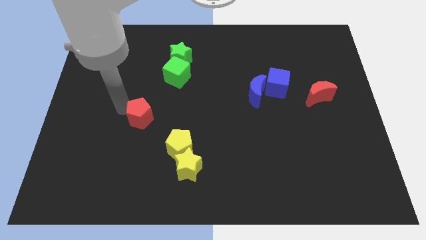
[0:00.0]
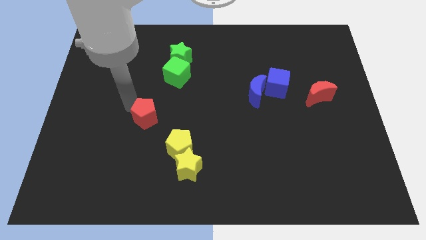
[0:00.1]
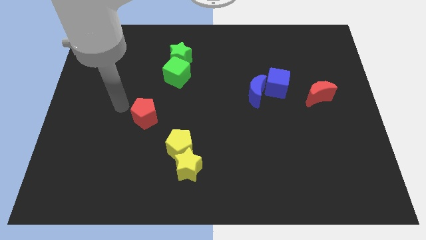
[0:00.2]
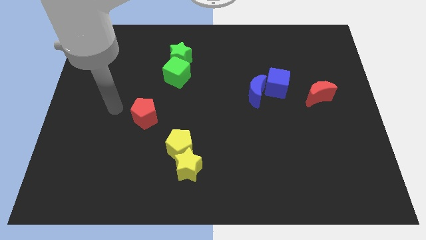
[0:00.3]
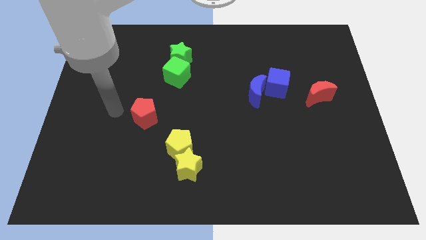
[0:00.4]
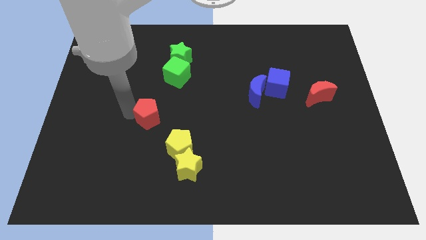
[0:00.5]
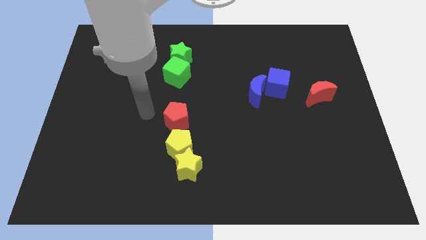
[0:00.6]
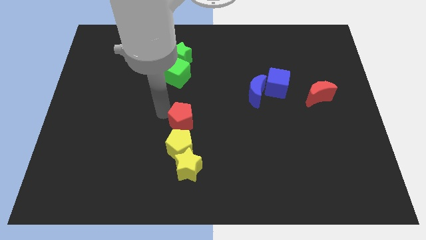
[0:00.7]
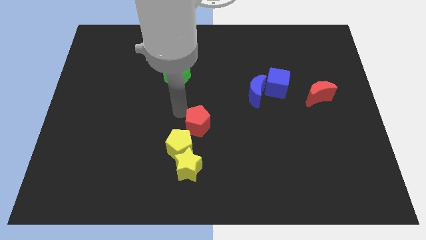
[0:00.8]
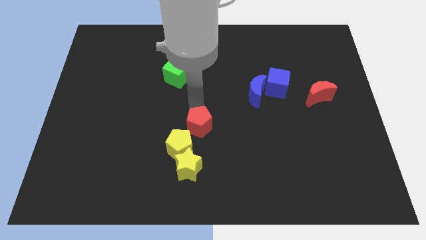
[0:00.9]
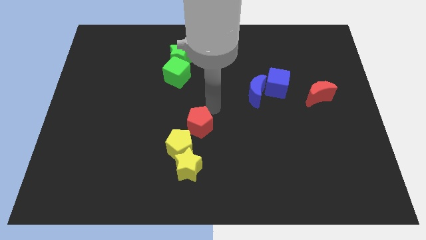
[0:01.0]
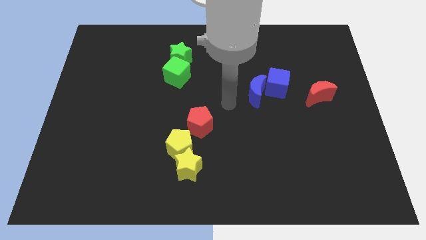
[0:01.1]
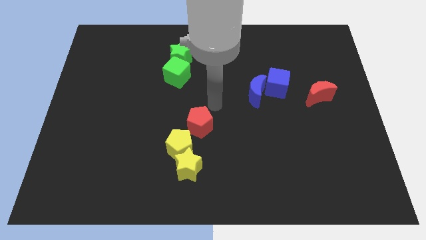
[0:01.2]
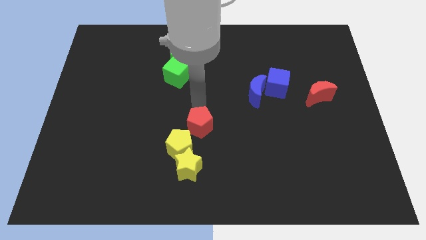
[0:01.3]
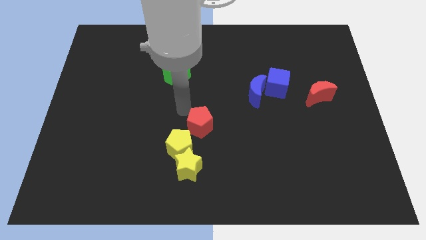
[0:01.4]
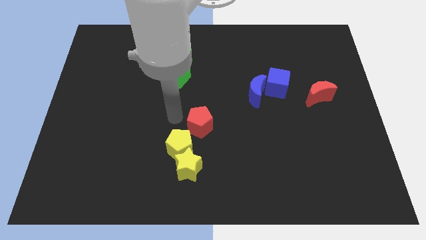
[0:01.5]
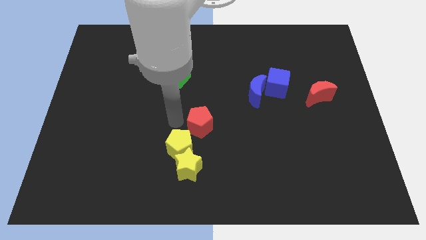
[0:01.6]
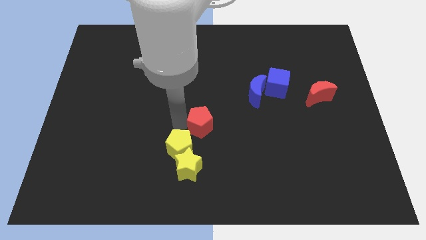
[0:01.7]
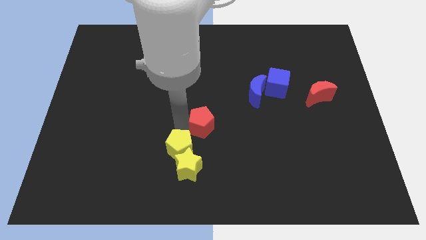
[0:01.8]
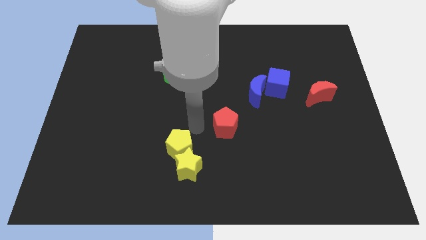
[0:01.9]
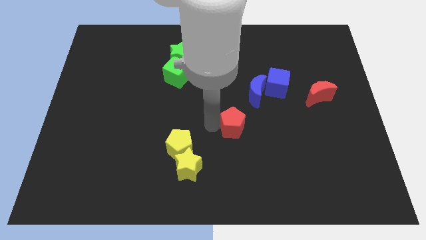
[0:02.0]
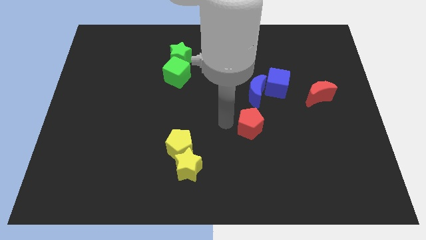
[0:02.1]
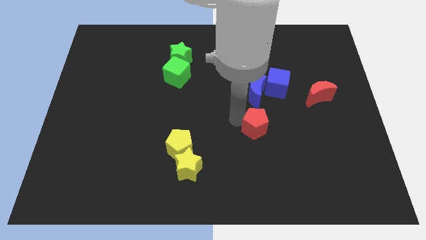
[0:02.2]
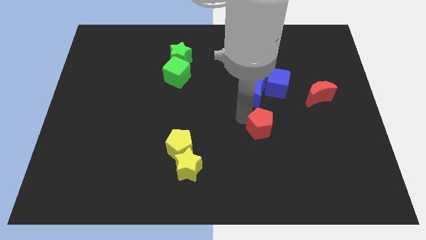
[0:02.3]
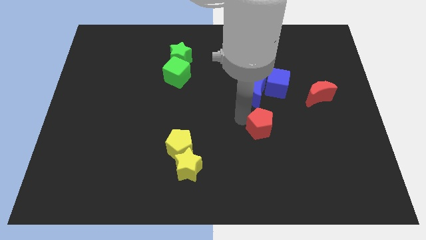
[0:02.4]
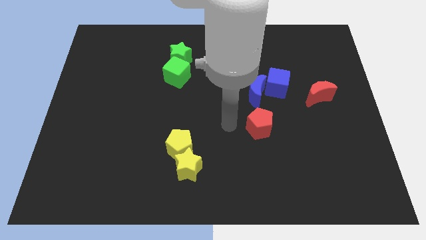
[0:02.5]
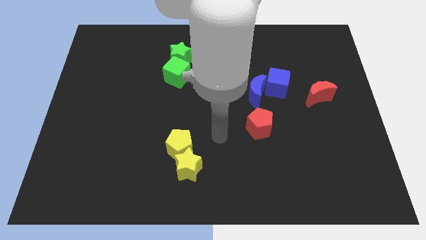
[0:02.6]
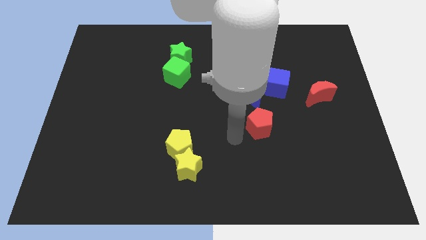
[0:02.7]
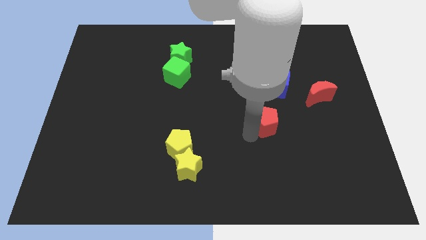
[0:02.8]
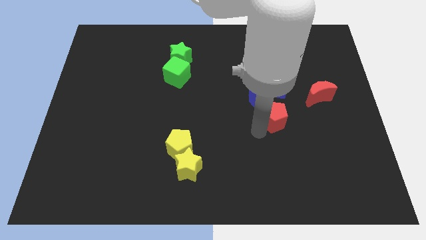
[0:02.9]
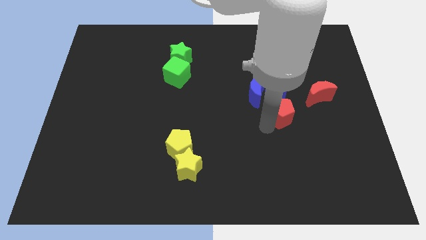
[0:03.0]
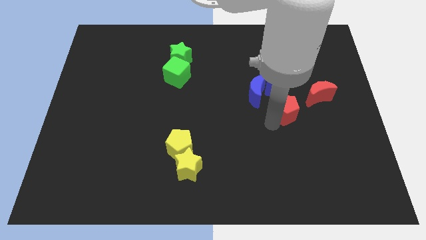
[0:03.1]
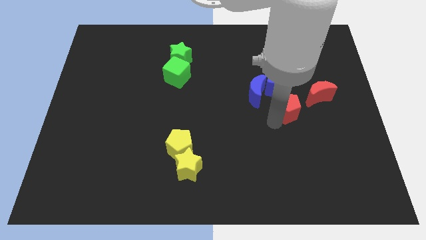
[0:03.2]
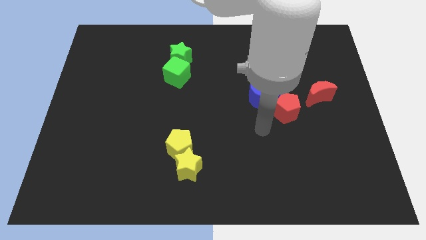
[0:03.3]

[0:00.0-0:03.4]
push the red pentagon towards the red moon

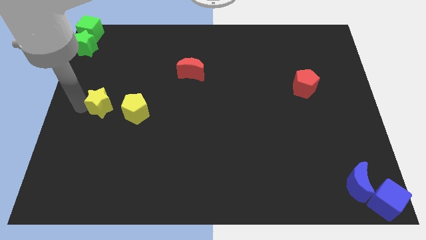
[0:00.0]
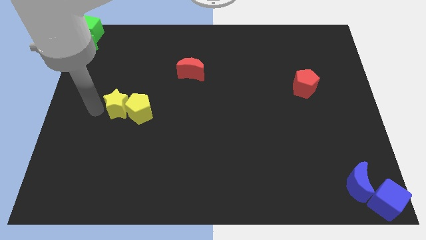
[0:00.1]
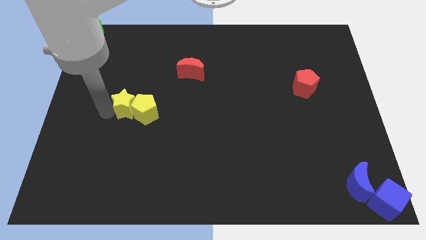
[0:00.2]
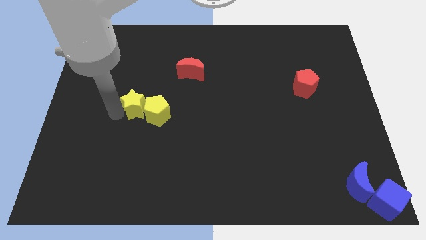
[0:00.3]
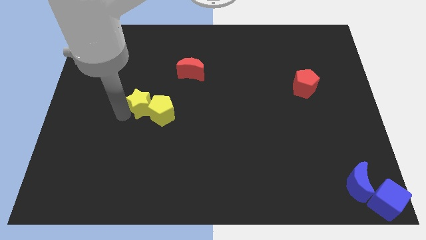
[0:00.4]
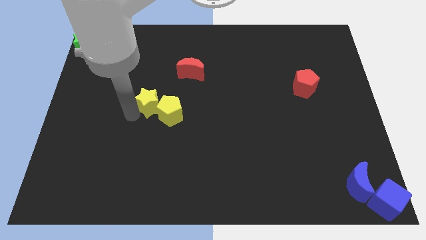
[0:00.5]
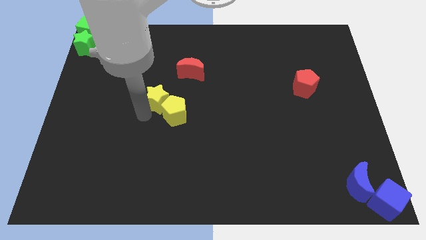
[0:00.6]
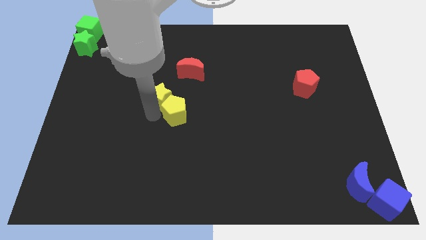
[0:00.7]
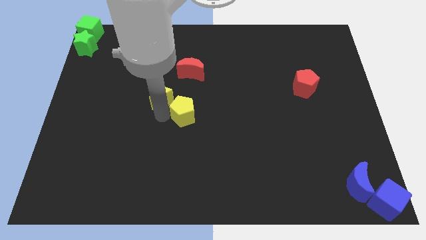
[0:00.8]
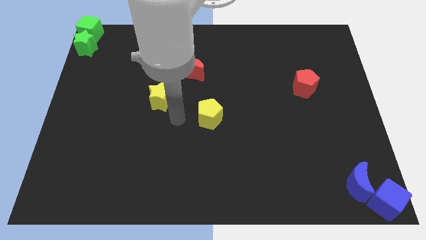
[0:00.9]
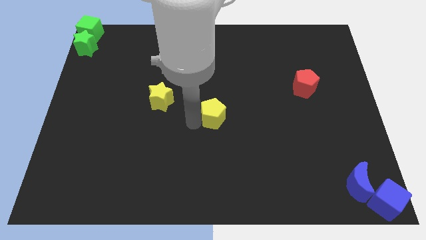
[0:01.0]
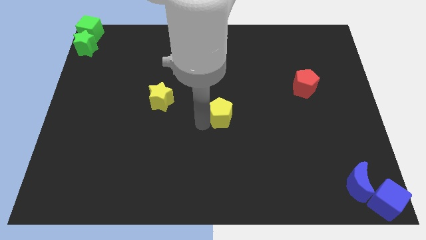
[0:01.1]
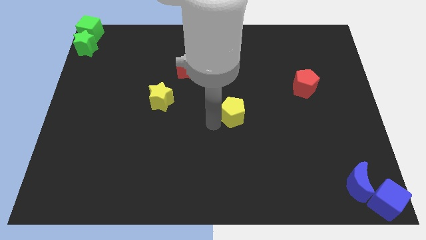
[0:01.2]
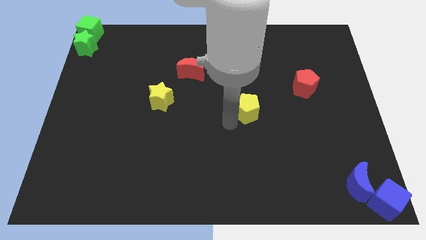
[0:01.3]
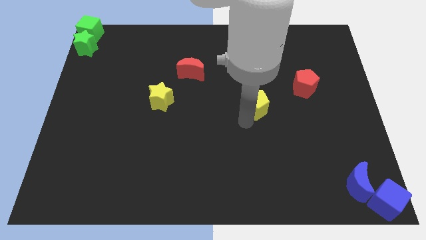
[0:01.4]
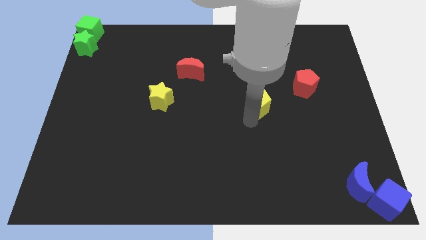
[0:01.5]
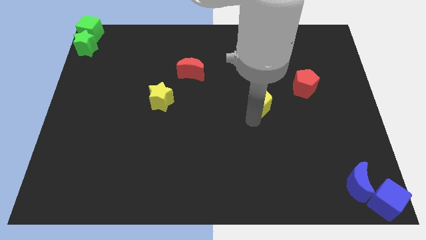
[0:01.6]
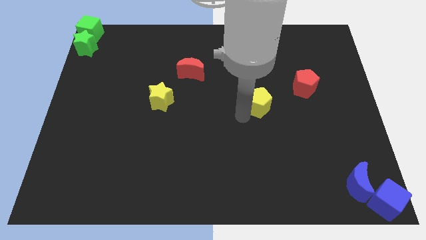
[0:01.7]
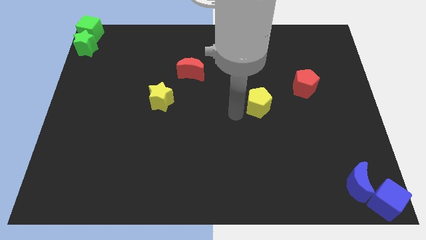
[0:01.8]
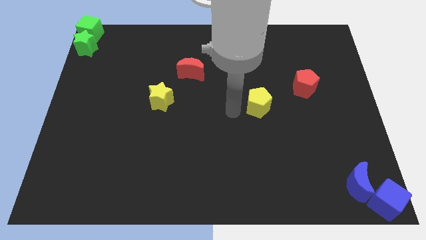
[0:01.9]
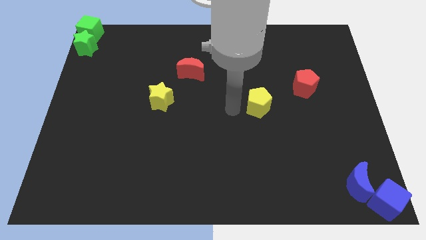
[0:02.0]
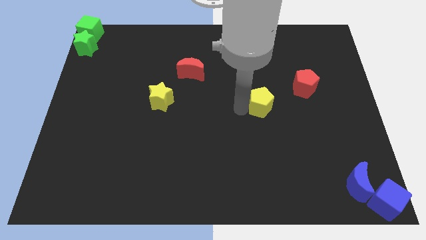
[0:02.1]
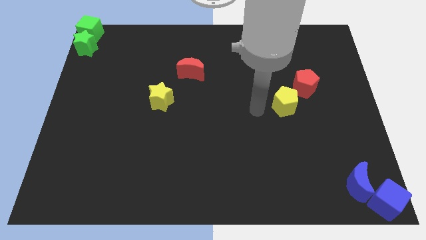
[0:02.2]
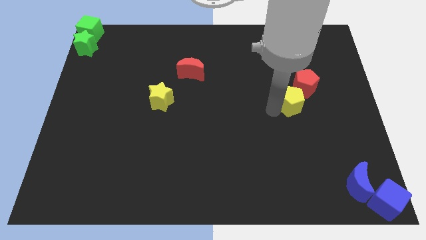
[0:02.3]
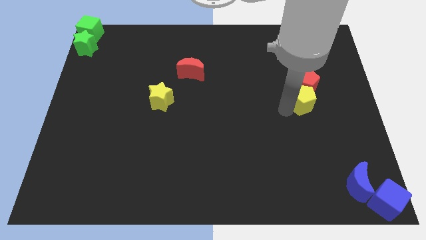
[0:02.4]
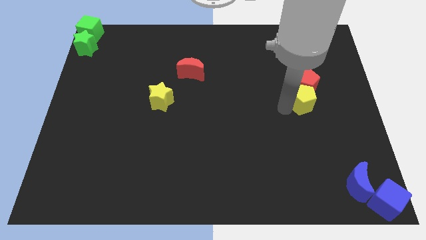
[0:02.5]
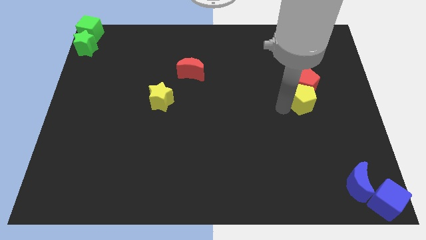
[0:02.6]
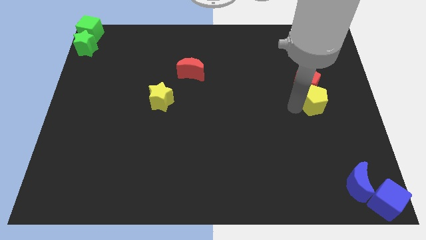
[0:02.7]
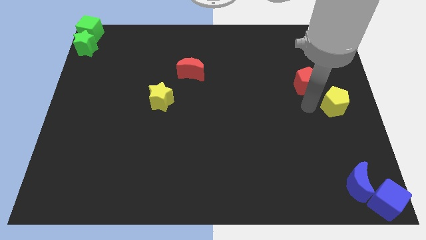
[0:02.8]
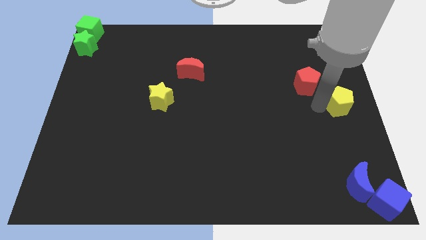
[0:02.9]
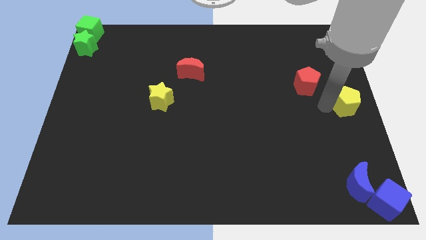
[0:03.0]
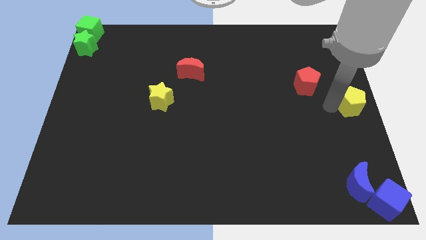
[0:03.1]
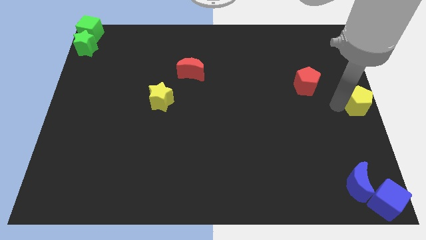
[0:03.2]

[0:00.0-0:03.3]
separate yellow pentagon from yellow star

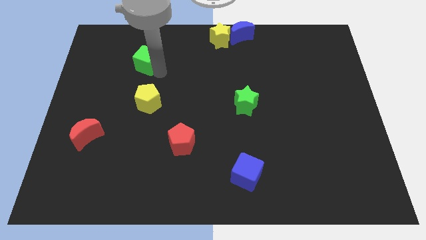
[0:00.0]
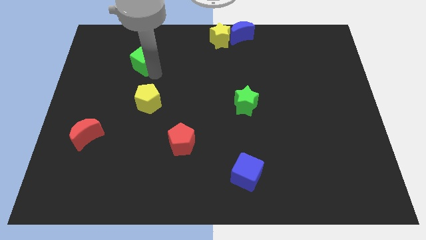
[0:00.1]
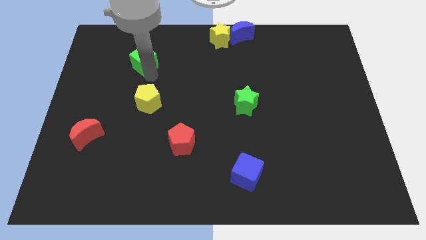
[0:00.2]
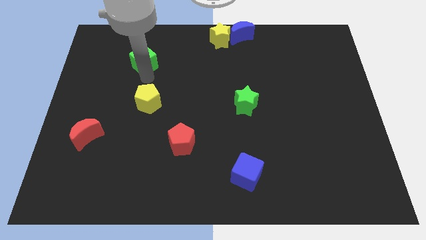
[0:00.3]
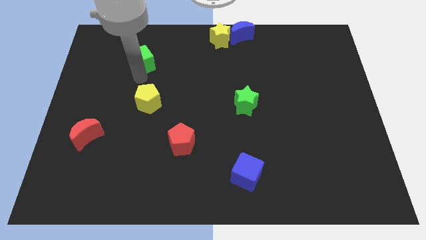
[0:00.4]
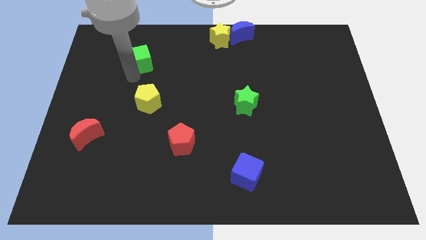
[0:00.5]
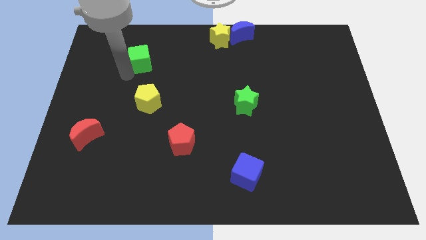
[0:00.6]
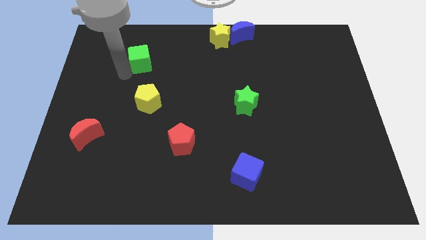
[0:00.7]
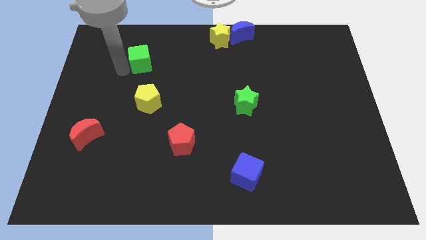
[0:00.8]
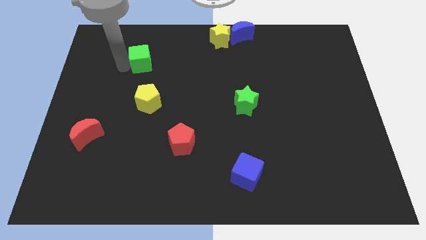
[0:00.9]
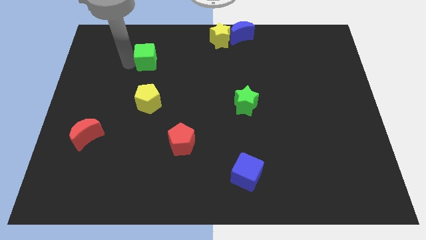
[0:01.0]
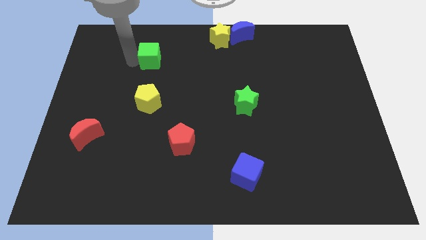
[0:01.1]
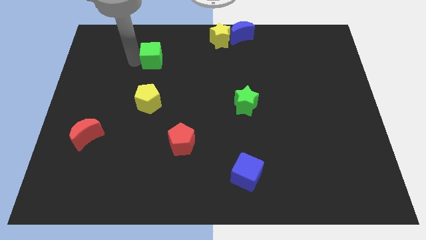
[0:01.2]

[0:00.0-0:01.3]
move green cube slightly to the right

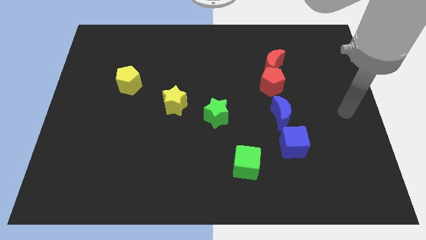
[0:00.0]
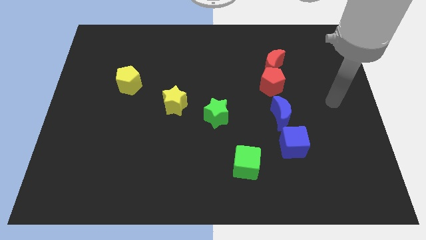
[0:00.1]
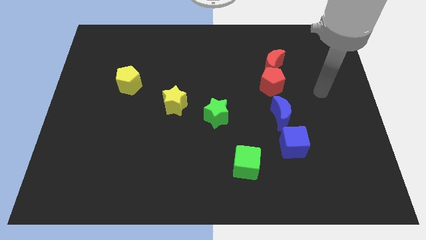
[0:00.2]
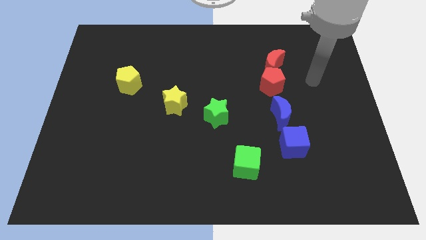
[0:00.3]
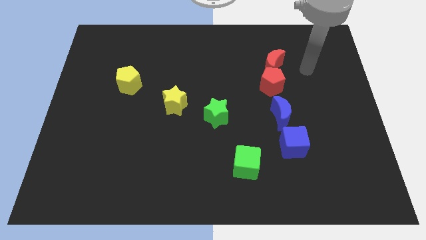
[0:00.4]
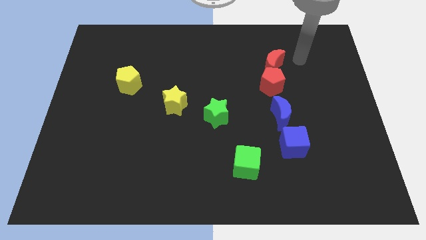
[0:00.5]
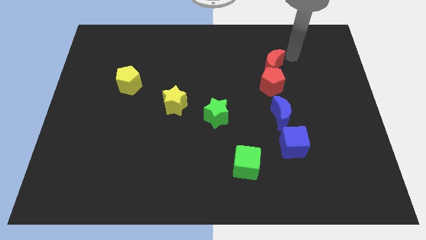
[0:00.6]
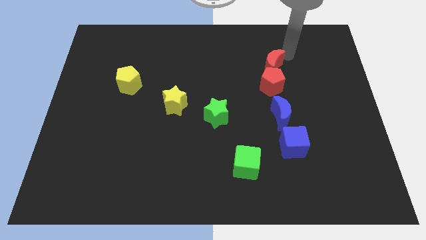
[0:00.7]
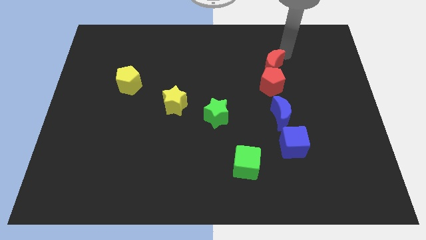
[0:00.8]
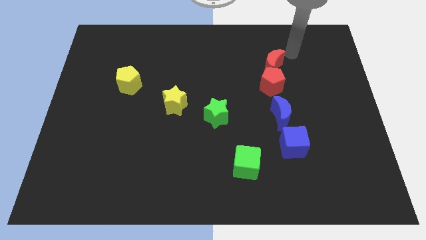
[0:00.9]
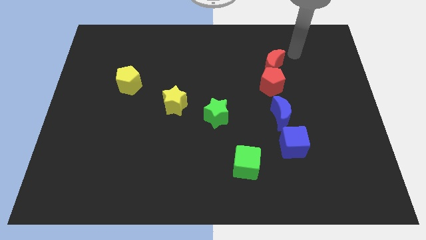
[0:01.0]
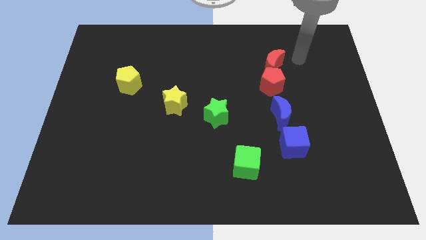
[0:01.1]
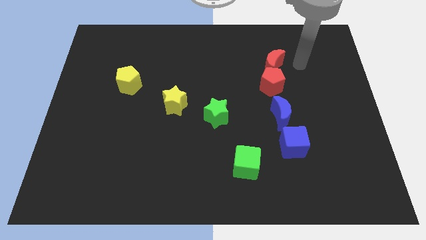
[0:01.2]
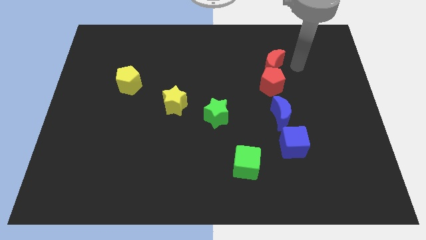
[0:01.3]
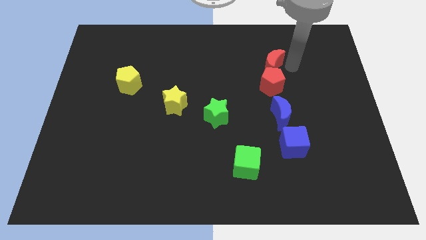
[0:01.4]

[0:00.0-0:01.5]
move your arm to the right side of the red moon
